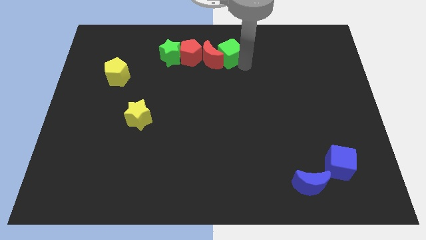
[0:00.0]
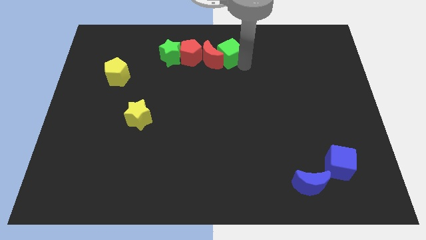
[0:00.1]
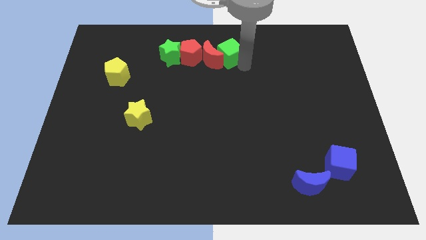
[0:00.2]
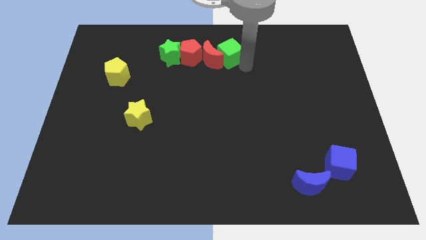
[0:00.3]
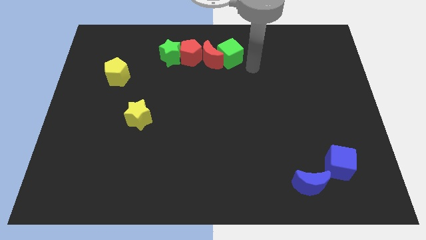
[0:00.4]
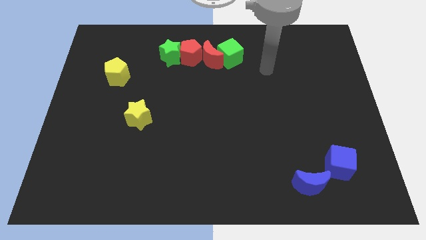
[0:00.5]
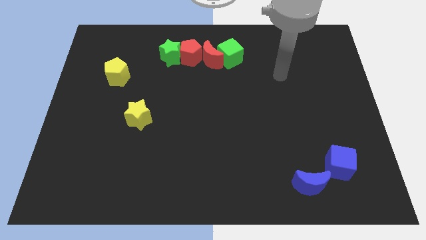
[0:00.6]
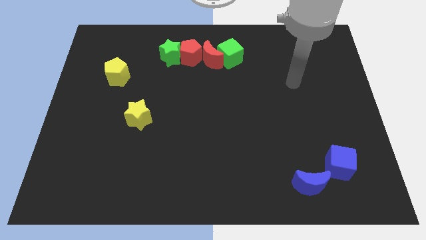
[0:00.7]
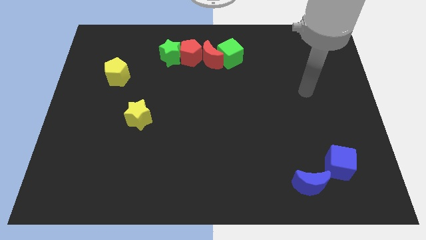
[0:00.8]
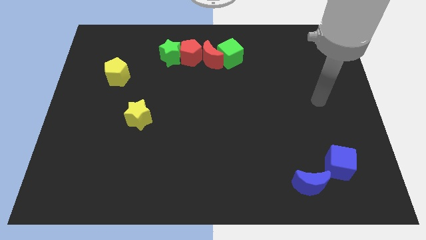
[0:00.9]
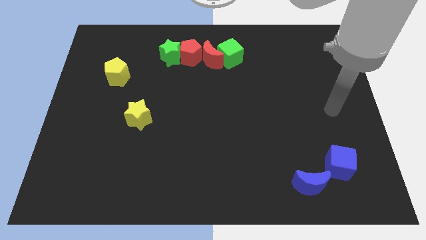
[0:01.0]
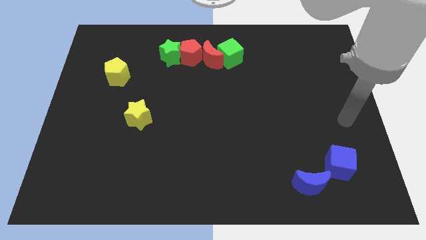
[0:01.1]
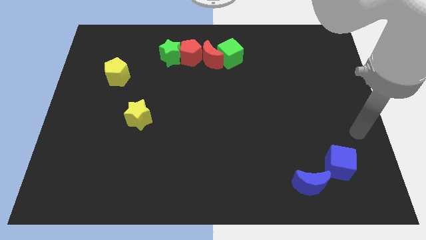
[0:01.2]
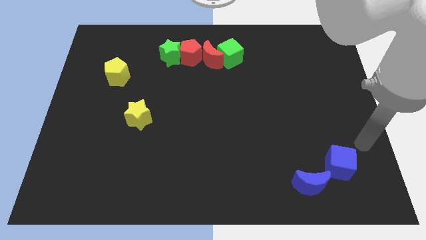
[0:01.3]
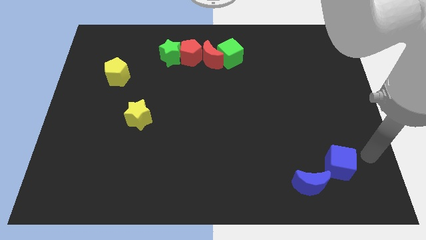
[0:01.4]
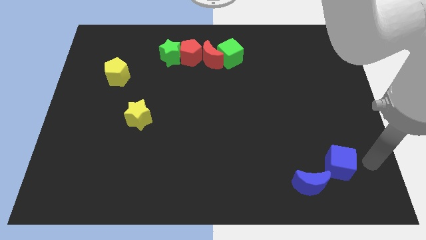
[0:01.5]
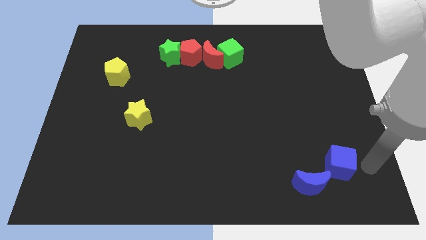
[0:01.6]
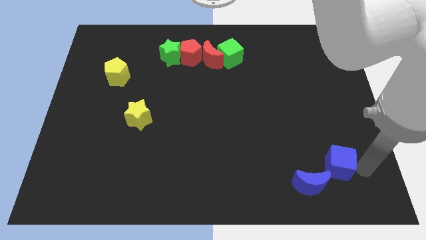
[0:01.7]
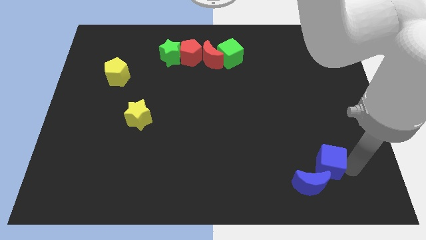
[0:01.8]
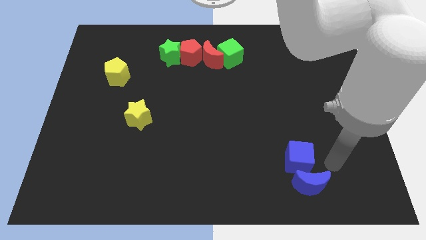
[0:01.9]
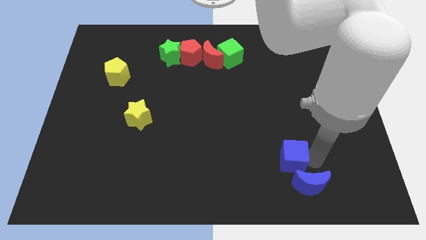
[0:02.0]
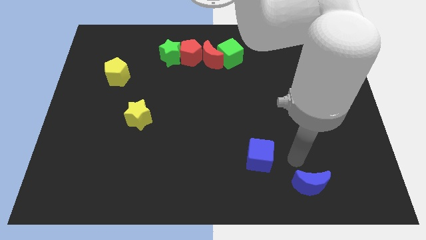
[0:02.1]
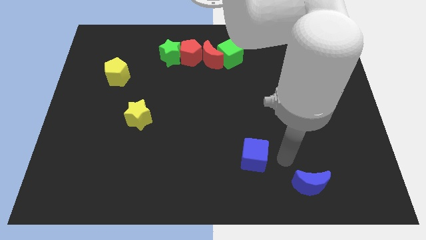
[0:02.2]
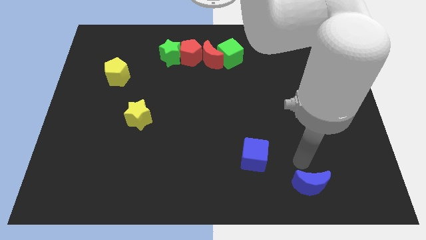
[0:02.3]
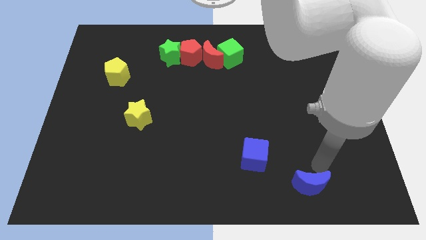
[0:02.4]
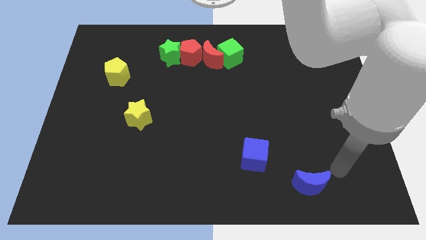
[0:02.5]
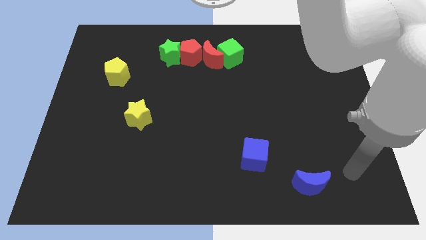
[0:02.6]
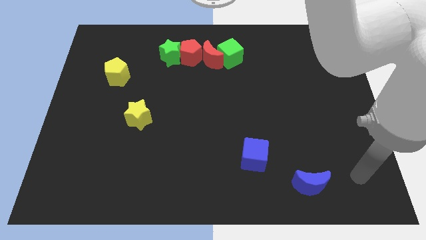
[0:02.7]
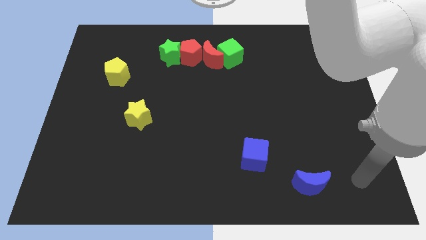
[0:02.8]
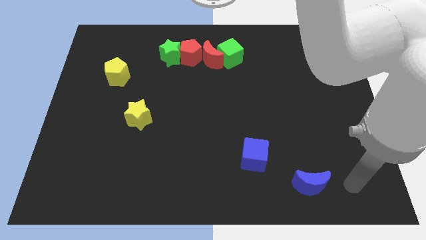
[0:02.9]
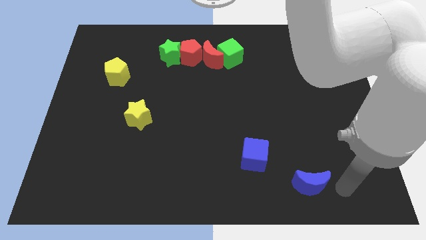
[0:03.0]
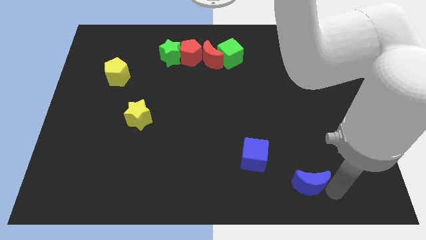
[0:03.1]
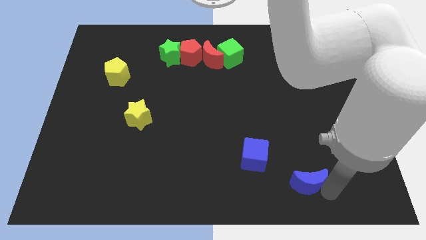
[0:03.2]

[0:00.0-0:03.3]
move the blue cube to the left side of the board

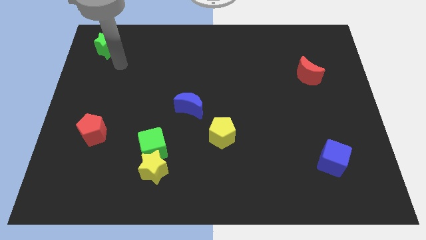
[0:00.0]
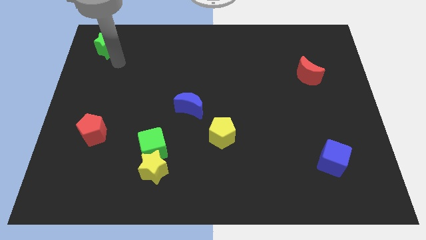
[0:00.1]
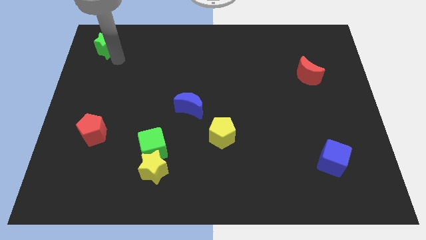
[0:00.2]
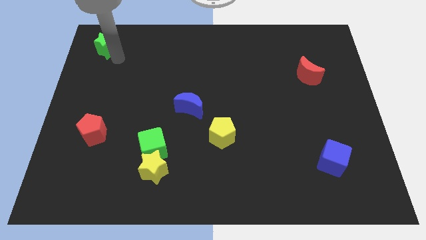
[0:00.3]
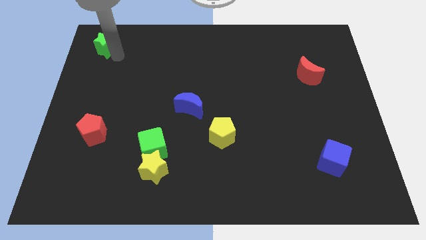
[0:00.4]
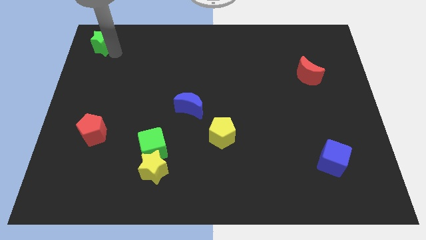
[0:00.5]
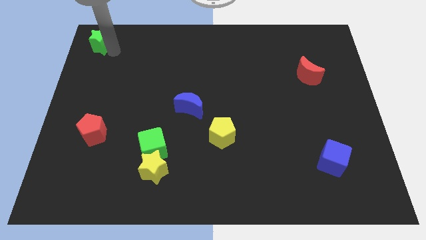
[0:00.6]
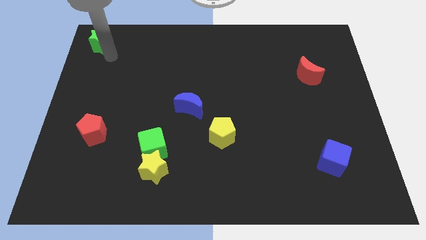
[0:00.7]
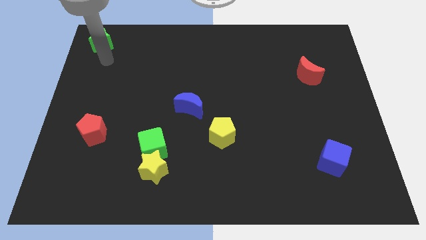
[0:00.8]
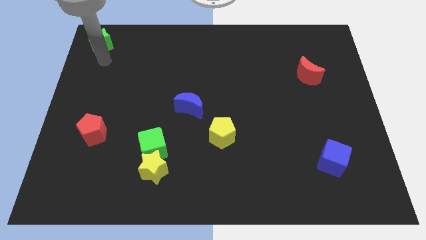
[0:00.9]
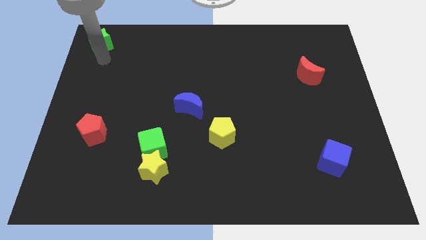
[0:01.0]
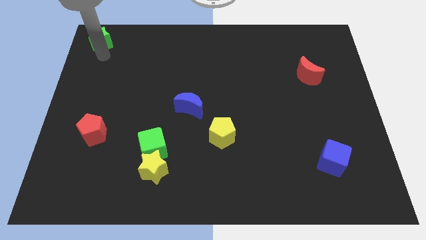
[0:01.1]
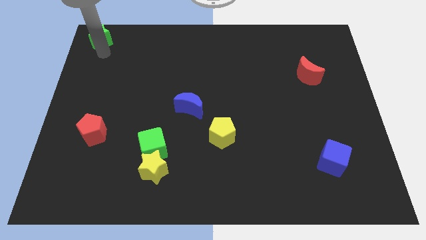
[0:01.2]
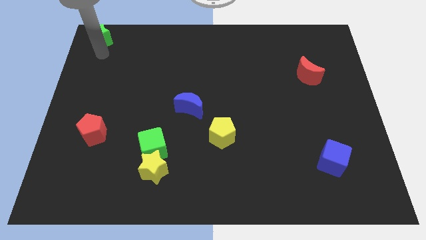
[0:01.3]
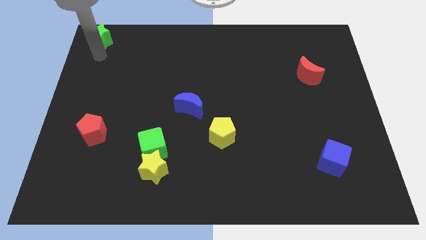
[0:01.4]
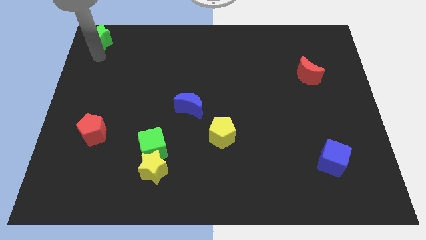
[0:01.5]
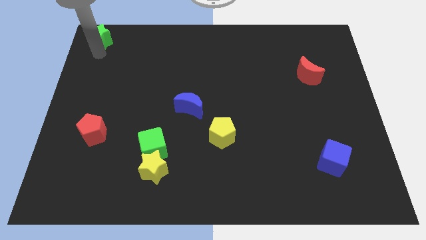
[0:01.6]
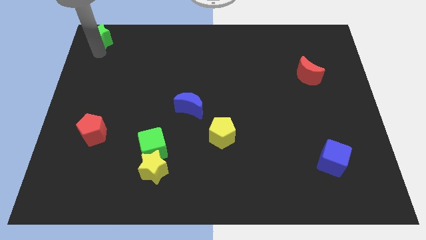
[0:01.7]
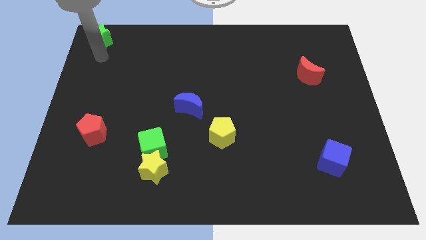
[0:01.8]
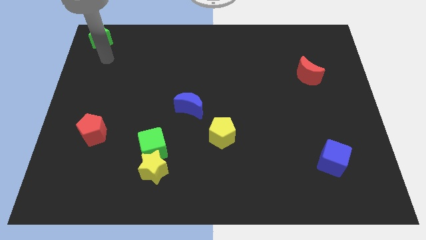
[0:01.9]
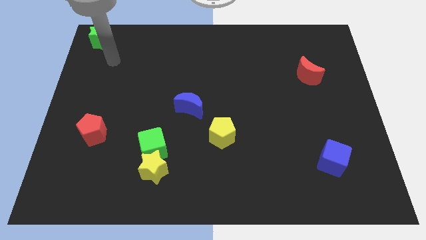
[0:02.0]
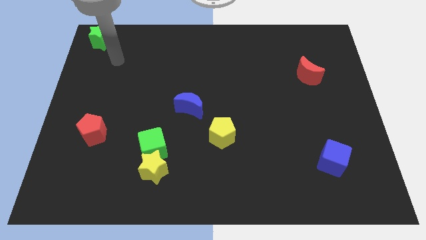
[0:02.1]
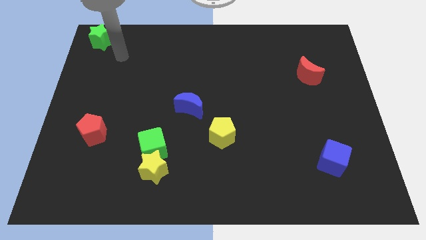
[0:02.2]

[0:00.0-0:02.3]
push the green star to the top left

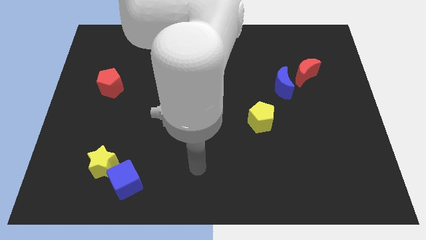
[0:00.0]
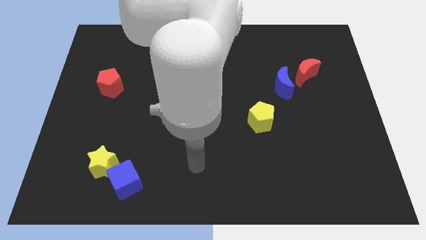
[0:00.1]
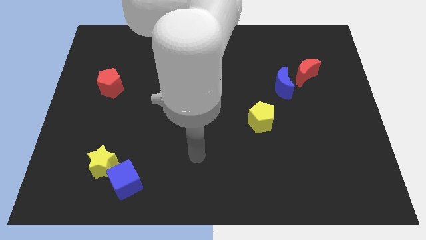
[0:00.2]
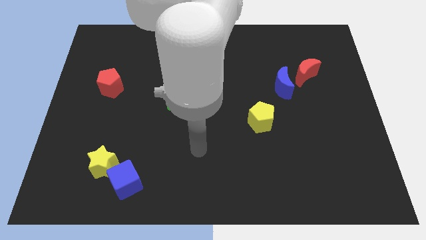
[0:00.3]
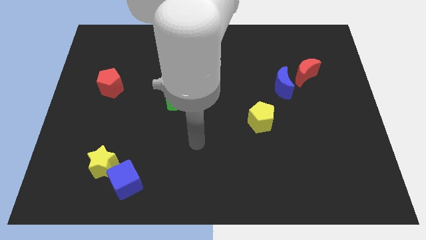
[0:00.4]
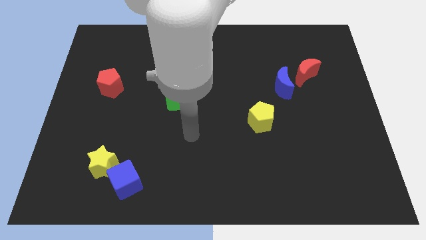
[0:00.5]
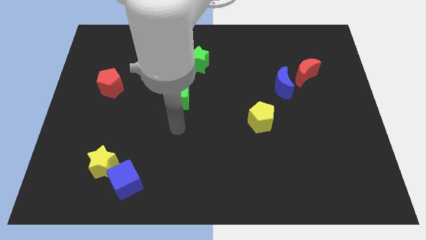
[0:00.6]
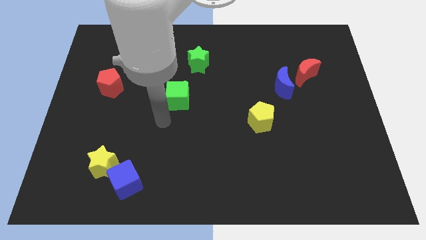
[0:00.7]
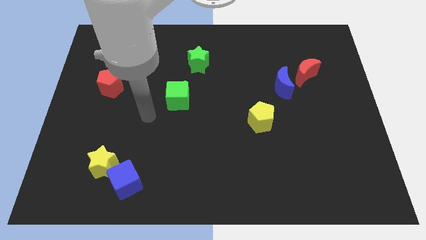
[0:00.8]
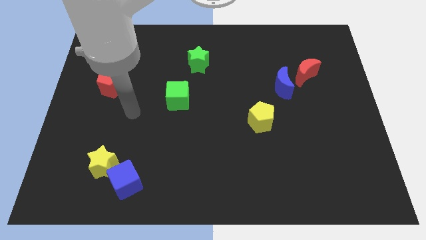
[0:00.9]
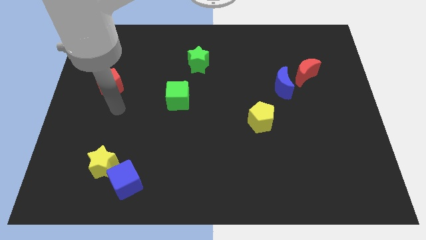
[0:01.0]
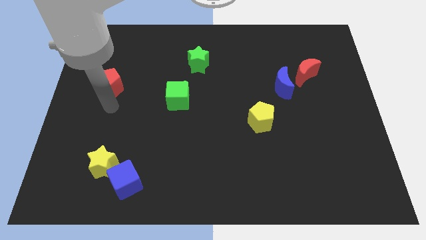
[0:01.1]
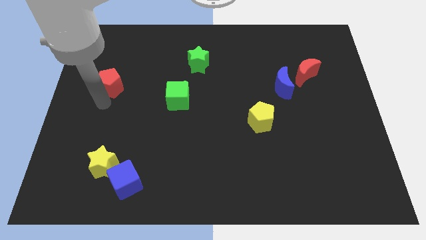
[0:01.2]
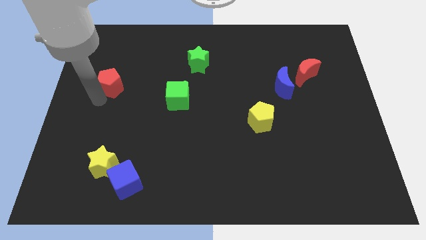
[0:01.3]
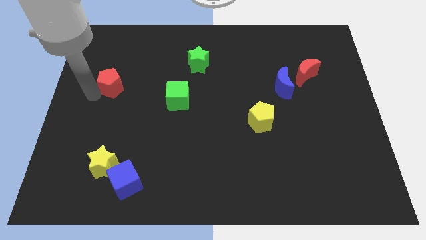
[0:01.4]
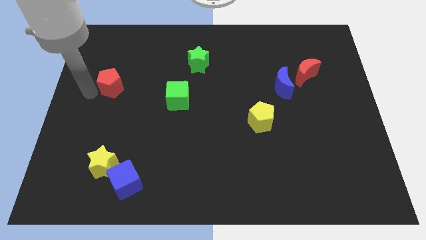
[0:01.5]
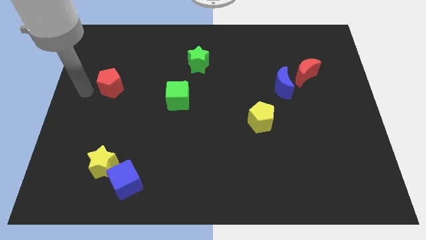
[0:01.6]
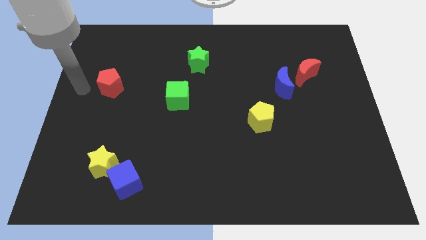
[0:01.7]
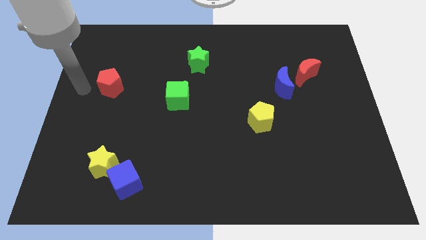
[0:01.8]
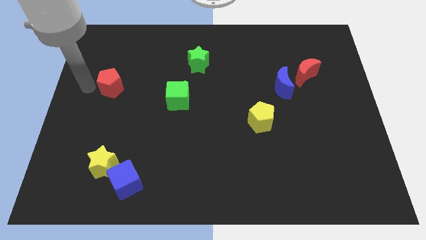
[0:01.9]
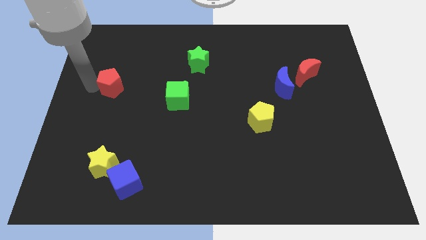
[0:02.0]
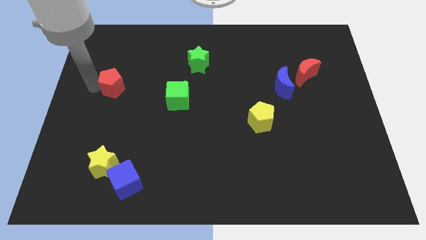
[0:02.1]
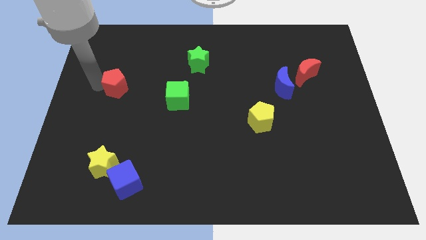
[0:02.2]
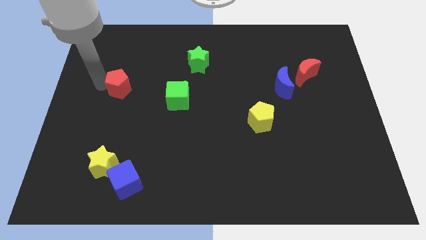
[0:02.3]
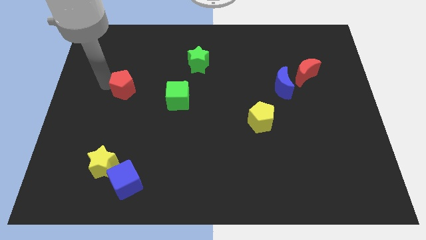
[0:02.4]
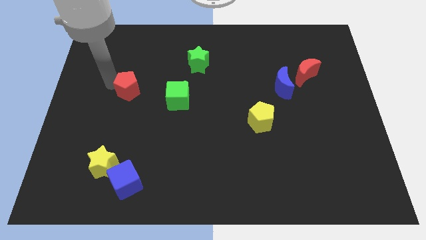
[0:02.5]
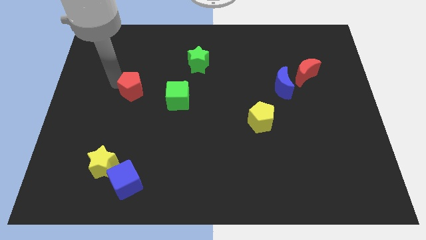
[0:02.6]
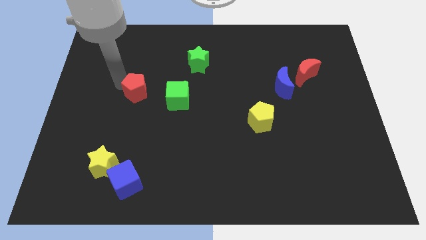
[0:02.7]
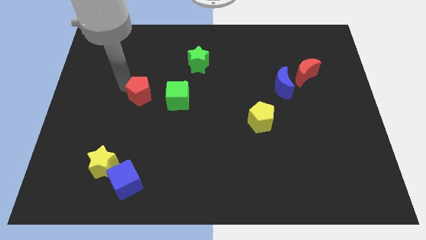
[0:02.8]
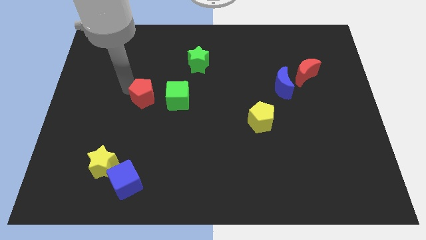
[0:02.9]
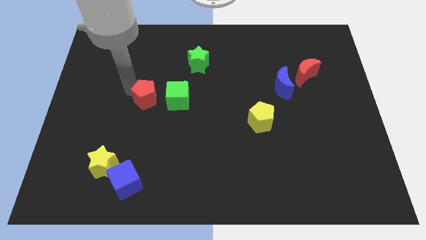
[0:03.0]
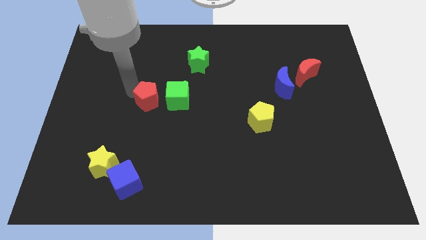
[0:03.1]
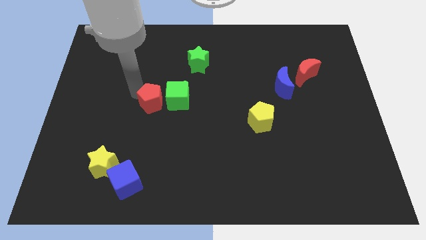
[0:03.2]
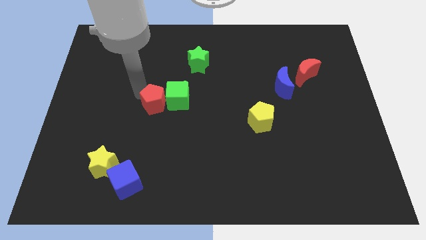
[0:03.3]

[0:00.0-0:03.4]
push the red pentagon to the left of the green cube
